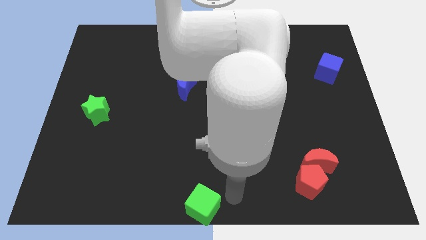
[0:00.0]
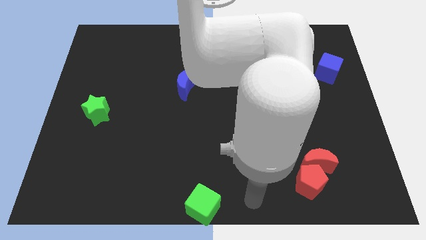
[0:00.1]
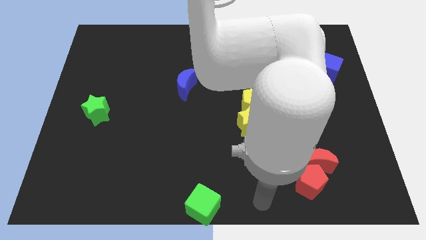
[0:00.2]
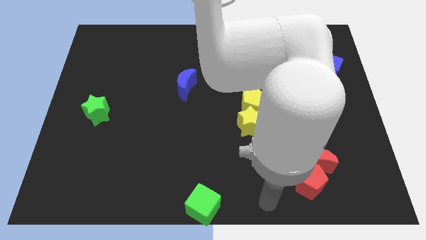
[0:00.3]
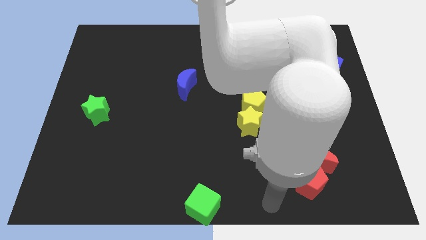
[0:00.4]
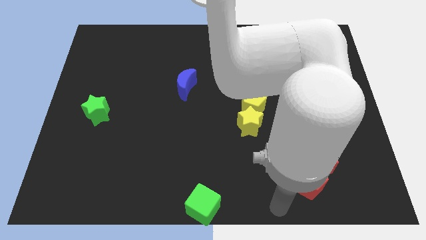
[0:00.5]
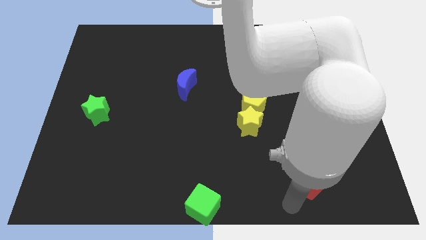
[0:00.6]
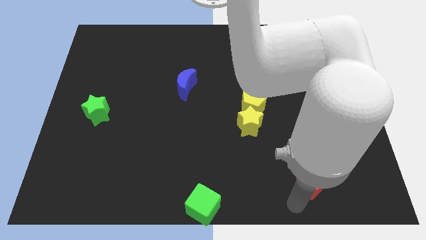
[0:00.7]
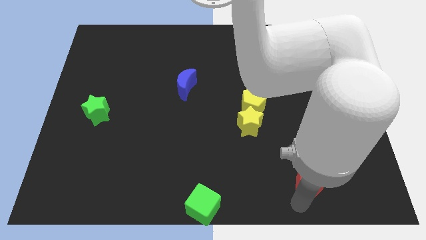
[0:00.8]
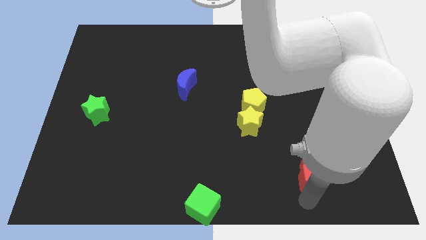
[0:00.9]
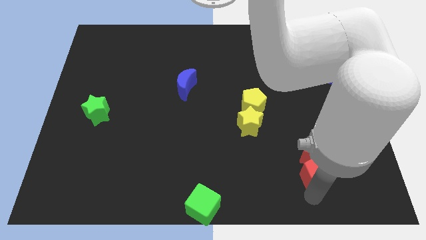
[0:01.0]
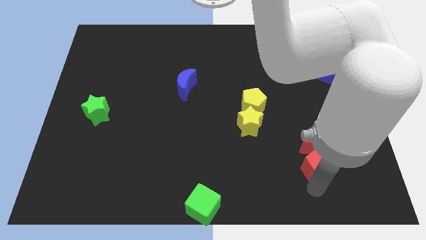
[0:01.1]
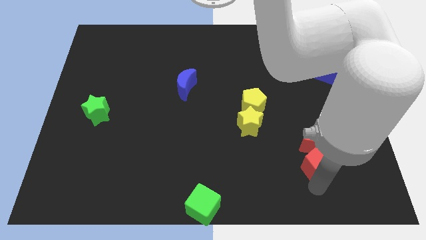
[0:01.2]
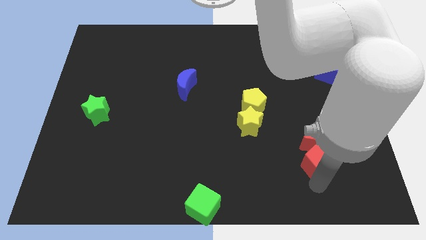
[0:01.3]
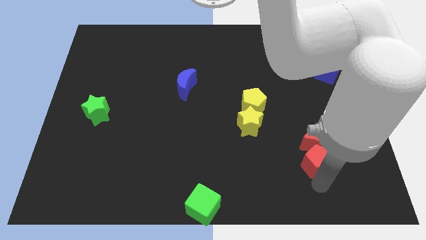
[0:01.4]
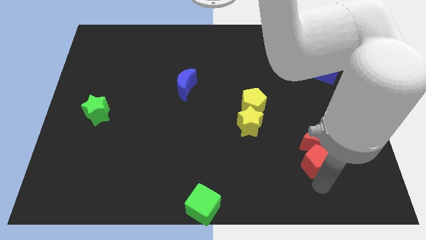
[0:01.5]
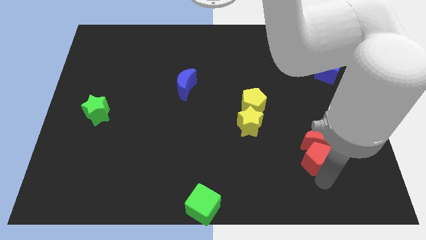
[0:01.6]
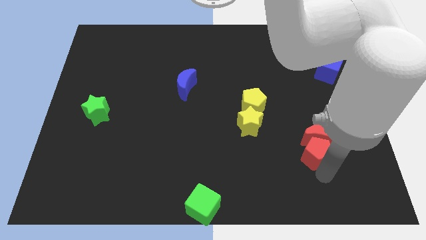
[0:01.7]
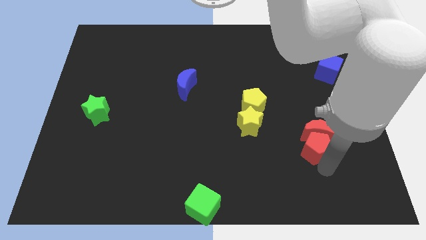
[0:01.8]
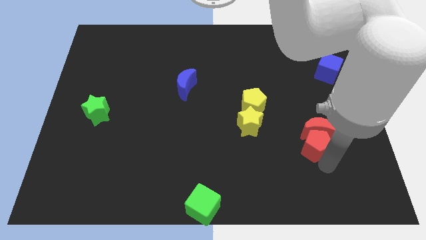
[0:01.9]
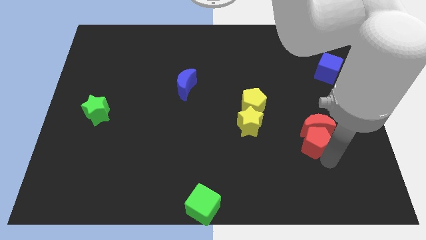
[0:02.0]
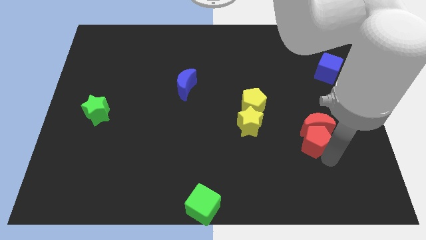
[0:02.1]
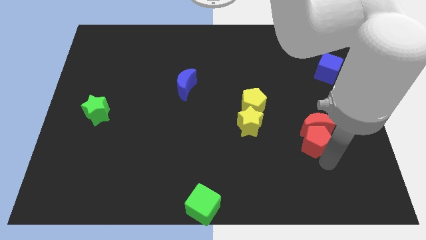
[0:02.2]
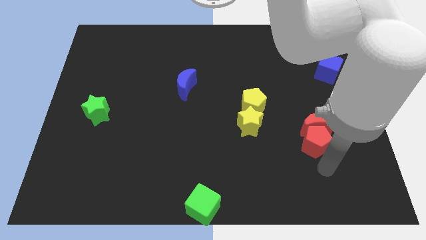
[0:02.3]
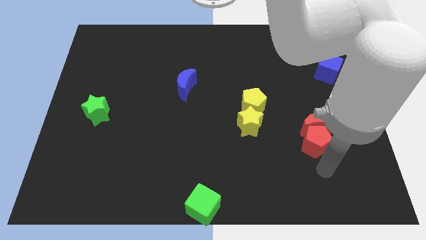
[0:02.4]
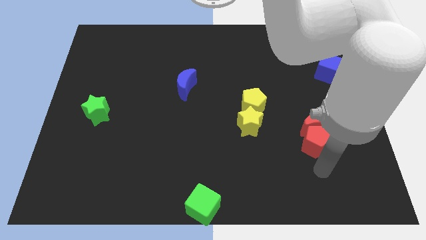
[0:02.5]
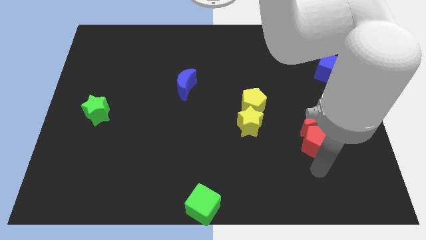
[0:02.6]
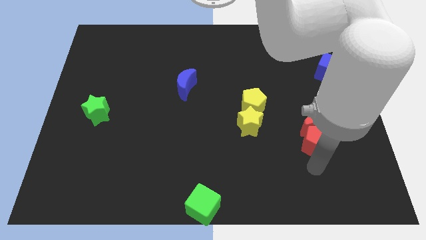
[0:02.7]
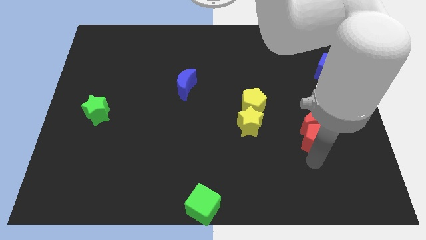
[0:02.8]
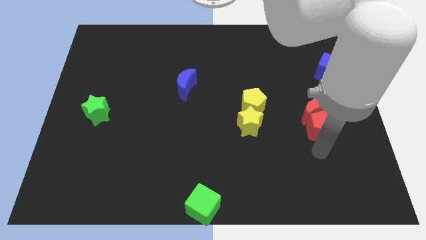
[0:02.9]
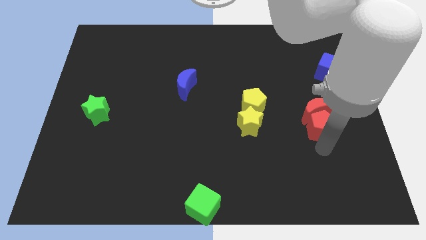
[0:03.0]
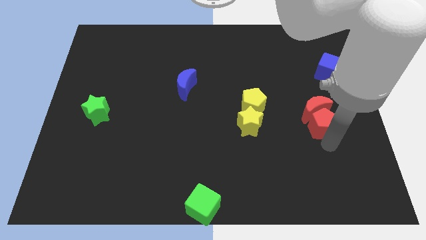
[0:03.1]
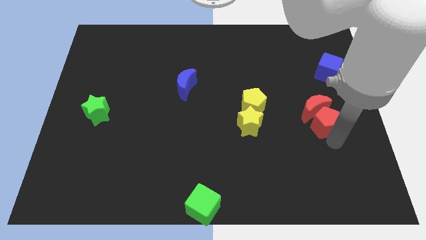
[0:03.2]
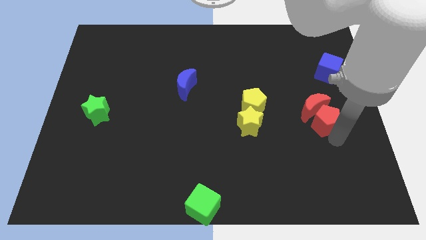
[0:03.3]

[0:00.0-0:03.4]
push the red blocks parallel right of the yellow blocks

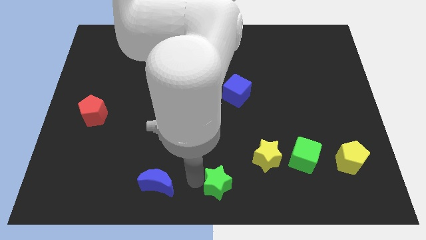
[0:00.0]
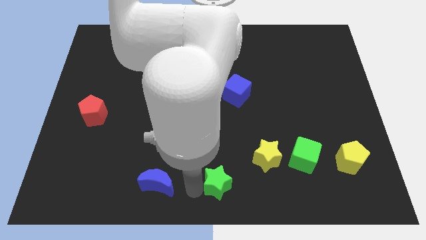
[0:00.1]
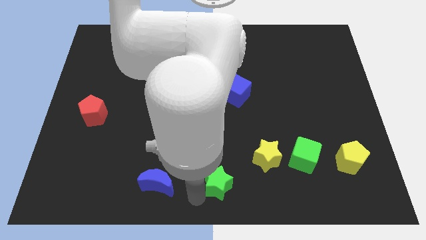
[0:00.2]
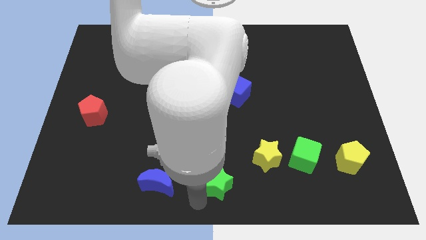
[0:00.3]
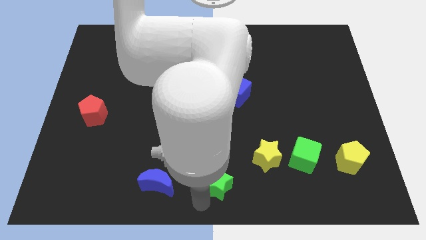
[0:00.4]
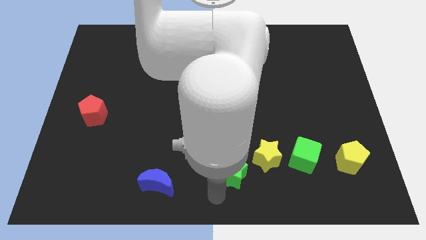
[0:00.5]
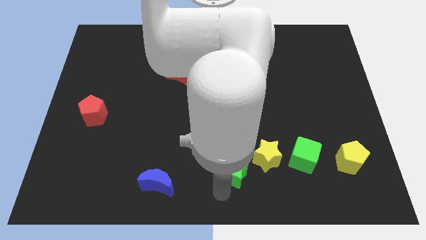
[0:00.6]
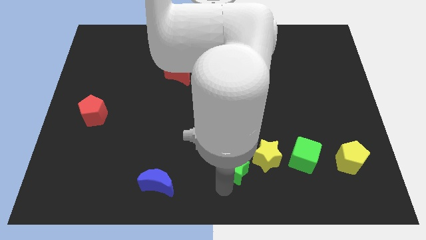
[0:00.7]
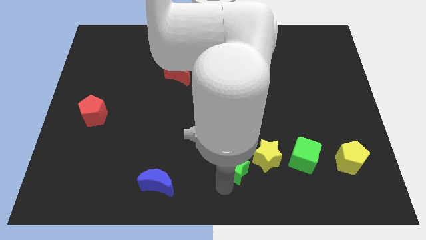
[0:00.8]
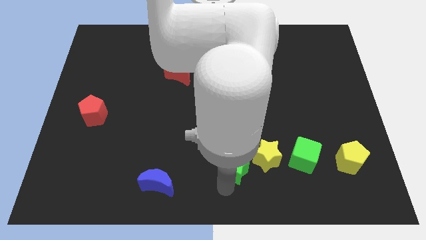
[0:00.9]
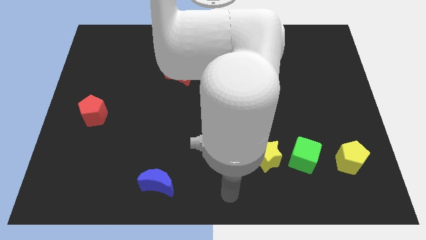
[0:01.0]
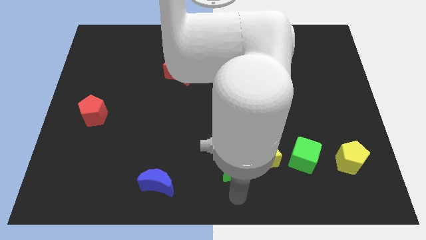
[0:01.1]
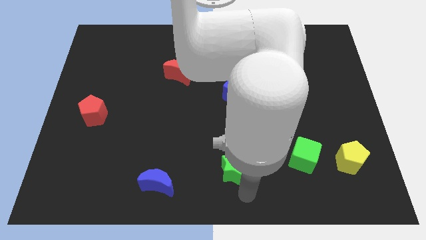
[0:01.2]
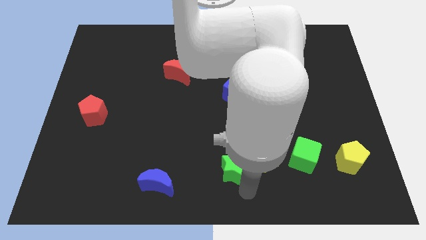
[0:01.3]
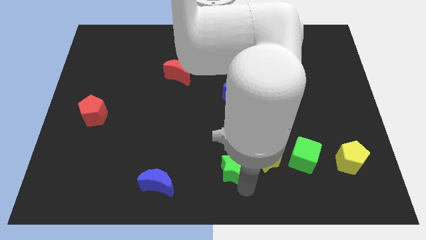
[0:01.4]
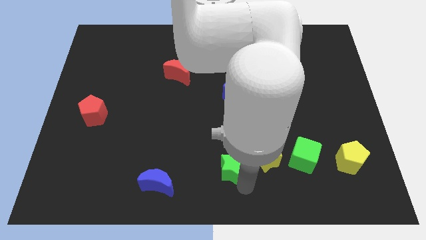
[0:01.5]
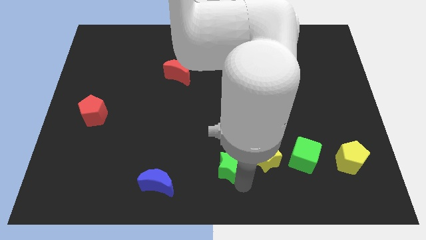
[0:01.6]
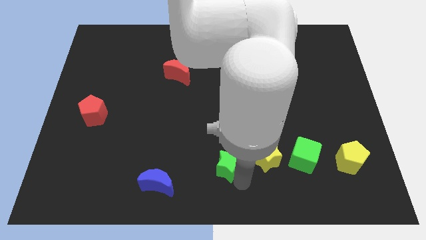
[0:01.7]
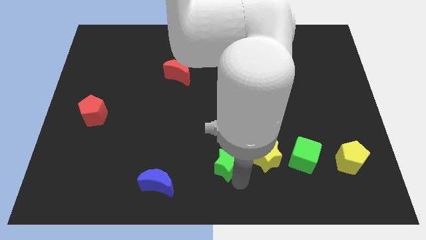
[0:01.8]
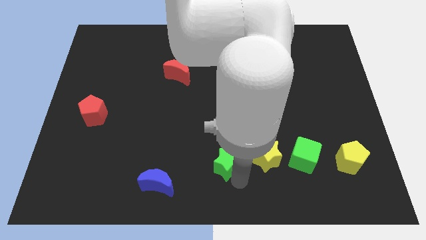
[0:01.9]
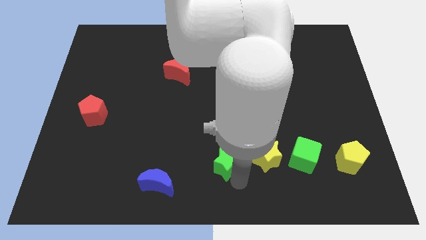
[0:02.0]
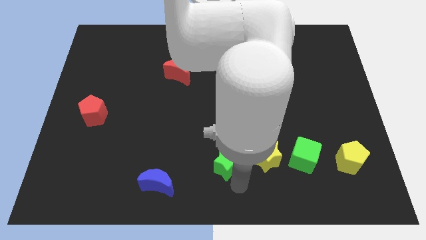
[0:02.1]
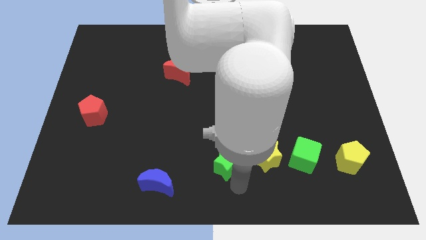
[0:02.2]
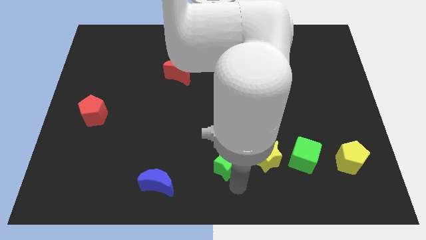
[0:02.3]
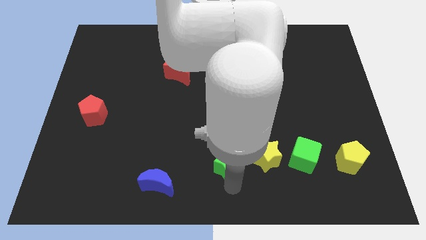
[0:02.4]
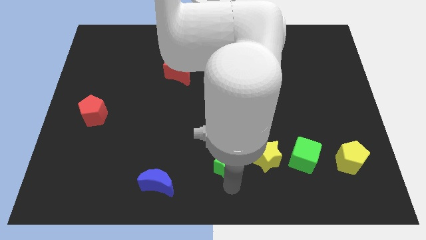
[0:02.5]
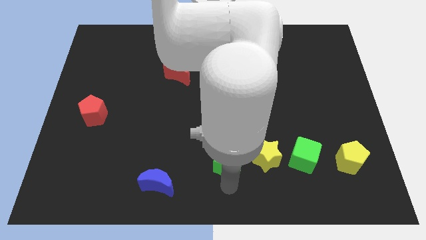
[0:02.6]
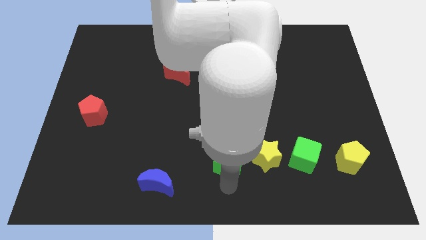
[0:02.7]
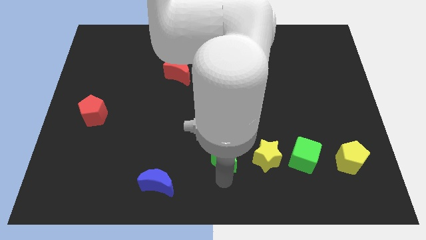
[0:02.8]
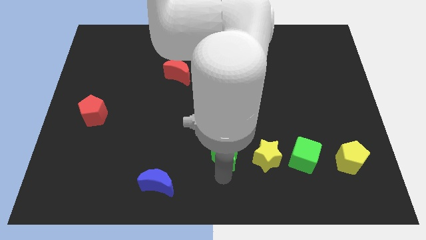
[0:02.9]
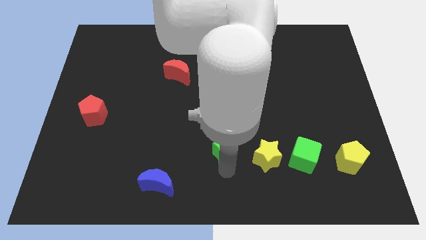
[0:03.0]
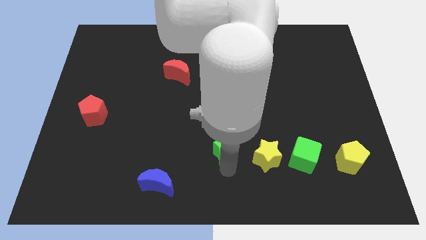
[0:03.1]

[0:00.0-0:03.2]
push the green star away from the yellow star

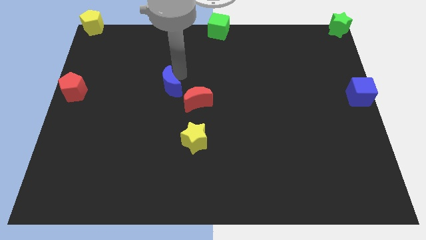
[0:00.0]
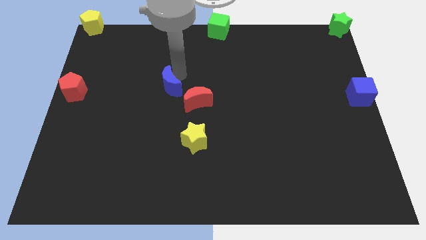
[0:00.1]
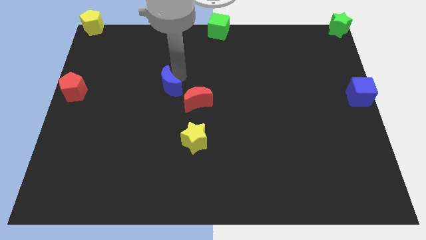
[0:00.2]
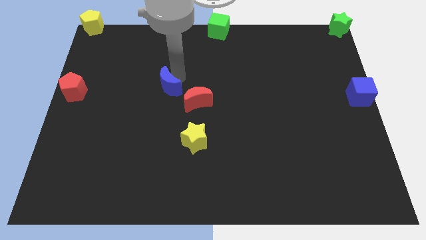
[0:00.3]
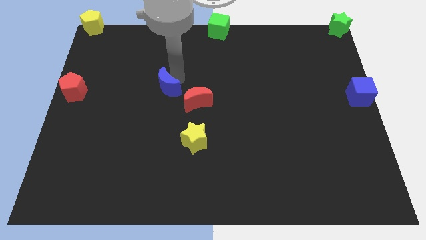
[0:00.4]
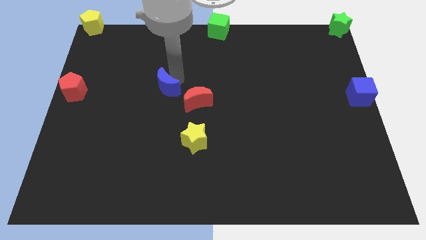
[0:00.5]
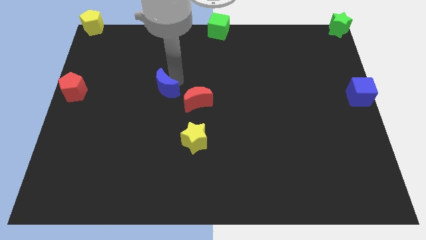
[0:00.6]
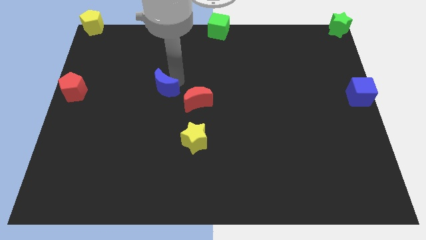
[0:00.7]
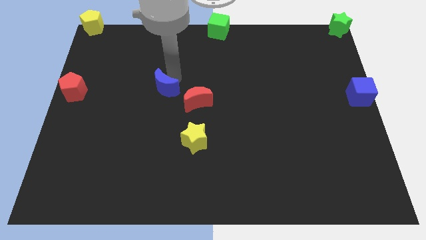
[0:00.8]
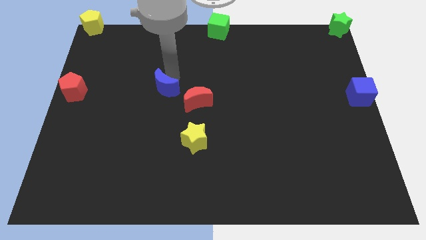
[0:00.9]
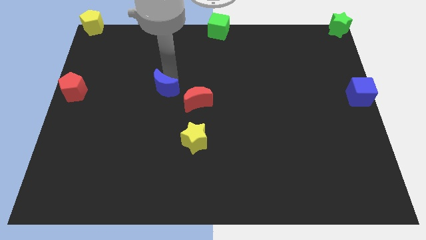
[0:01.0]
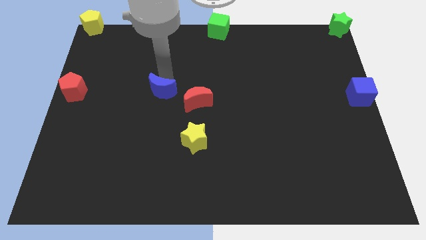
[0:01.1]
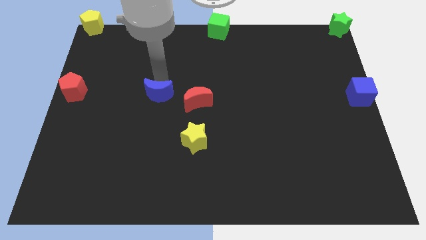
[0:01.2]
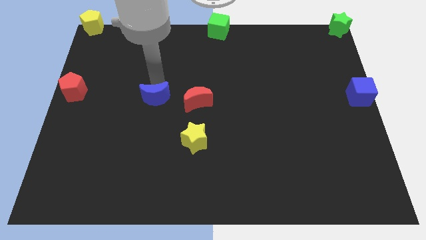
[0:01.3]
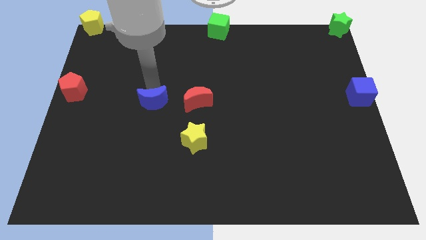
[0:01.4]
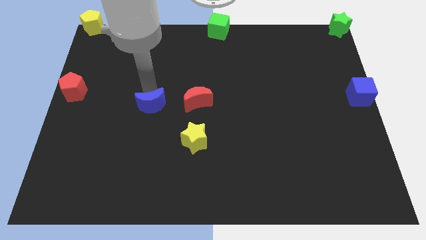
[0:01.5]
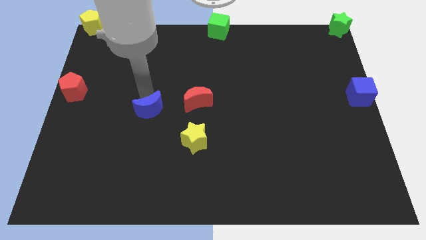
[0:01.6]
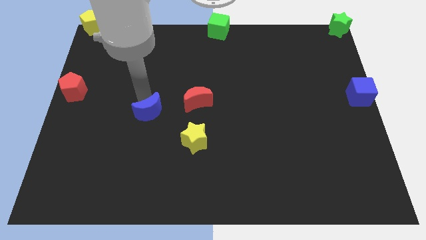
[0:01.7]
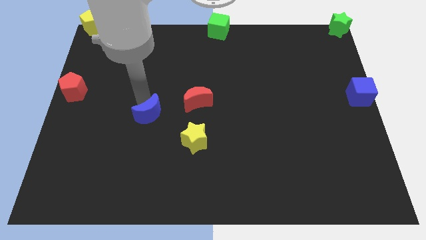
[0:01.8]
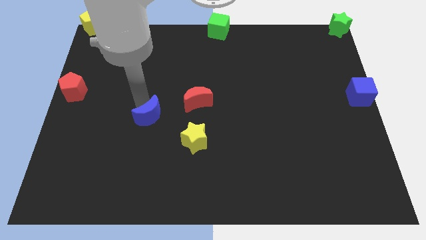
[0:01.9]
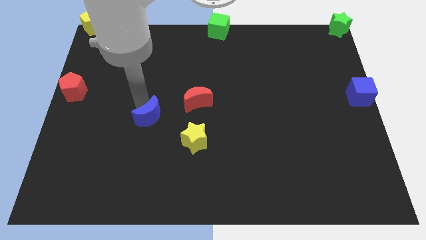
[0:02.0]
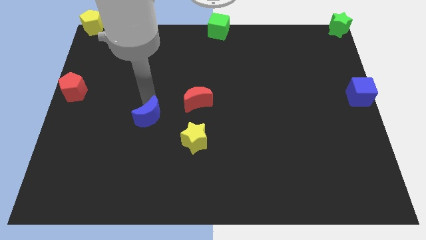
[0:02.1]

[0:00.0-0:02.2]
move blue crescent towards left center
